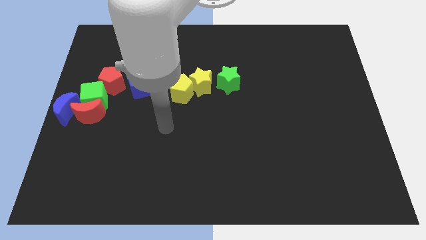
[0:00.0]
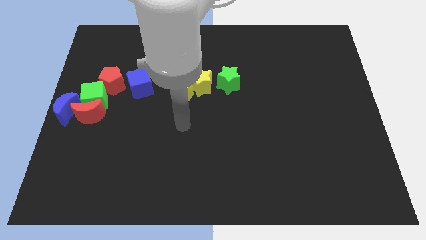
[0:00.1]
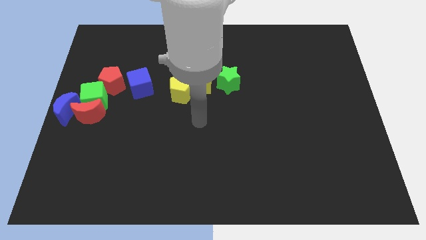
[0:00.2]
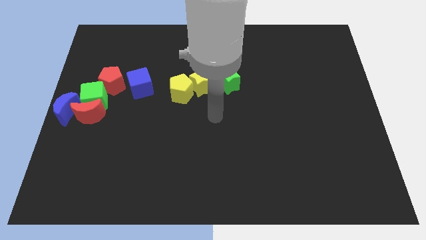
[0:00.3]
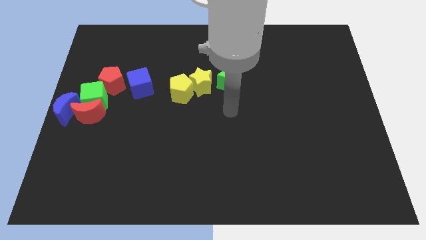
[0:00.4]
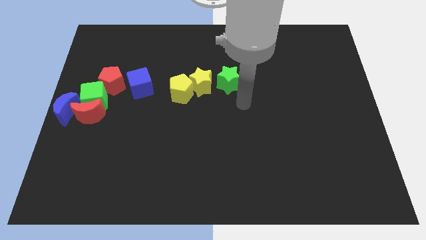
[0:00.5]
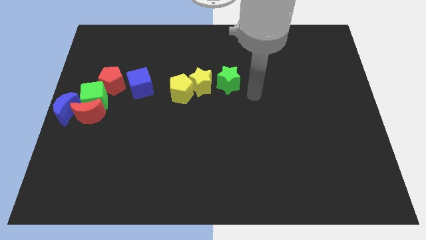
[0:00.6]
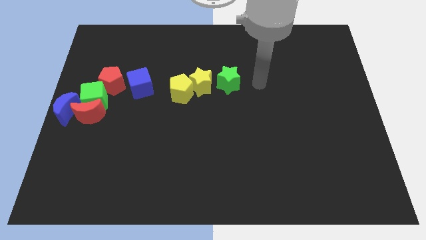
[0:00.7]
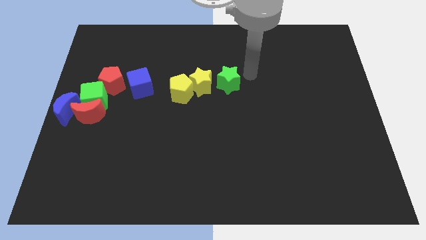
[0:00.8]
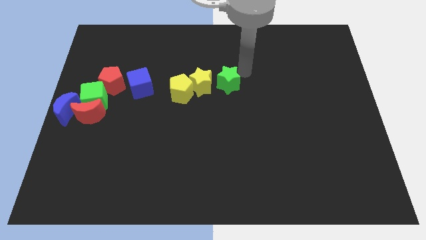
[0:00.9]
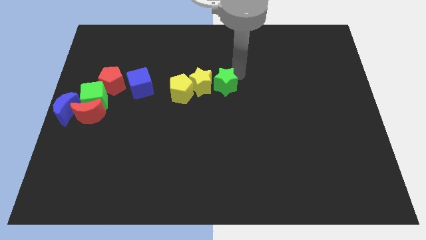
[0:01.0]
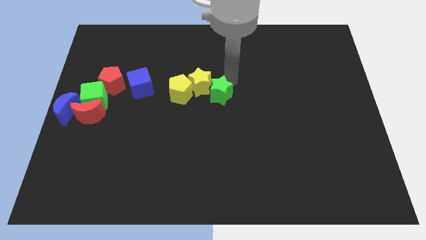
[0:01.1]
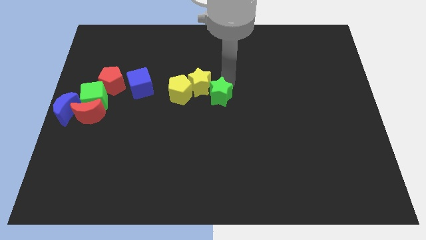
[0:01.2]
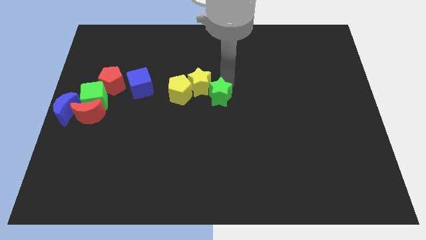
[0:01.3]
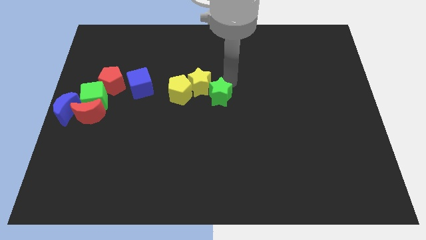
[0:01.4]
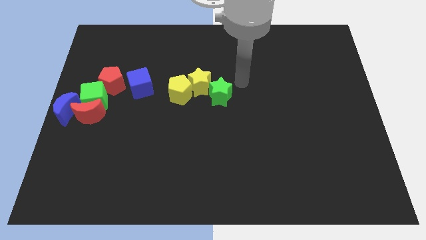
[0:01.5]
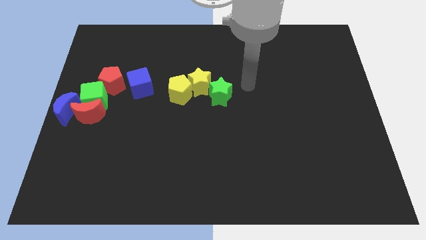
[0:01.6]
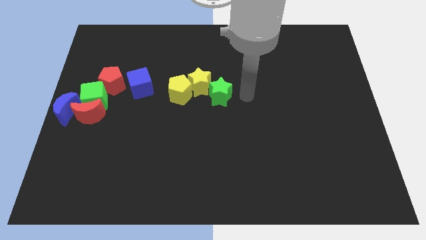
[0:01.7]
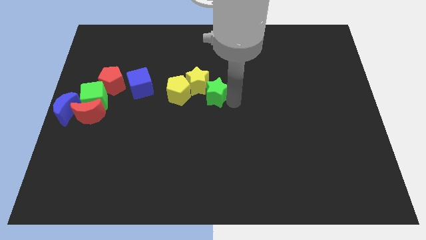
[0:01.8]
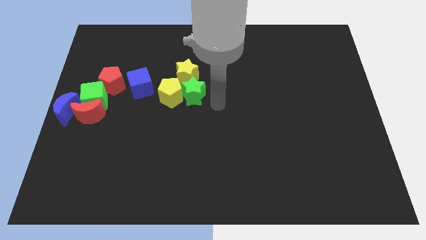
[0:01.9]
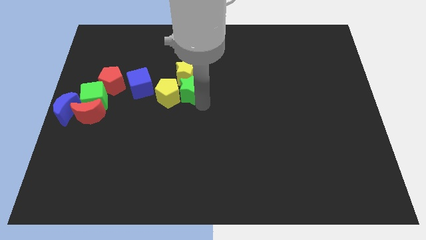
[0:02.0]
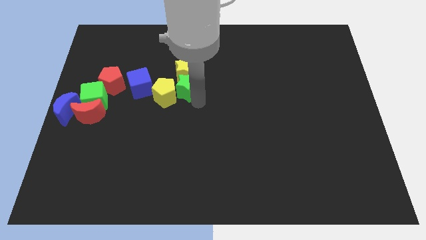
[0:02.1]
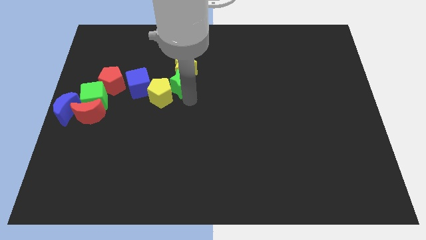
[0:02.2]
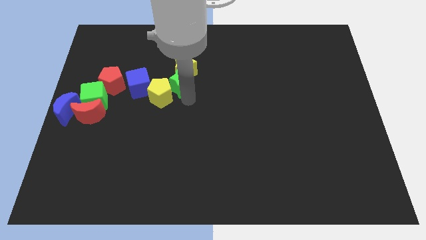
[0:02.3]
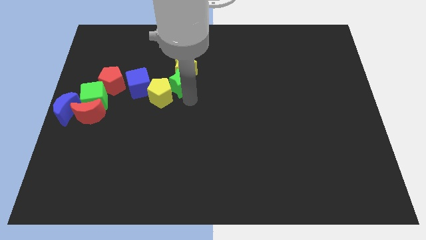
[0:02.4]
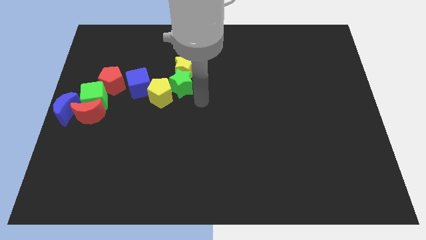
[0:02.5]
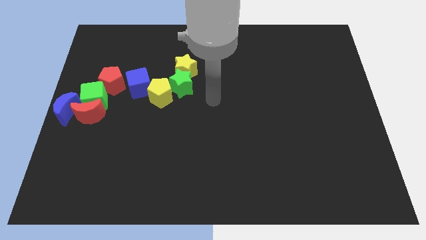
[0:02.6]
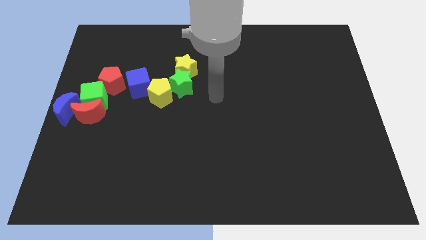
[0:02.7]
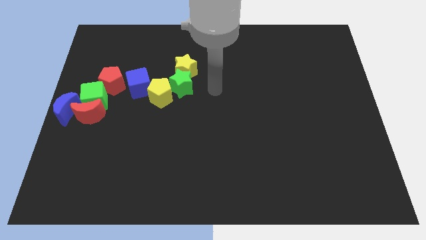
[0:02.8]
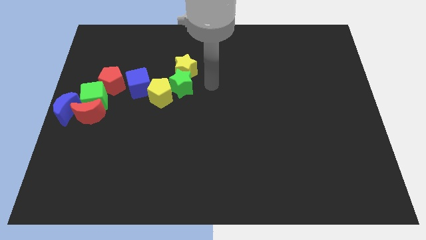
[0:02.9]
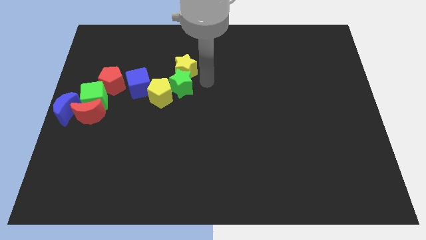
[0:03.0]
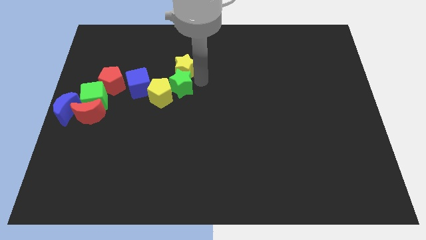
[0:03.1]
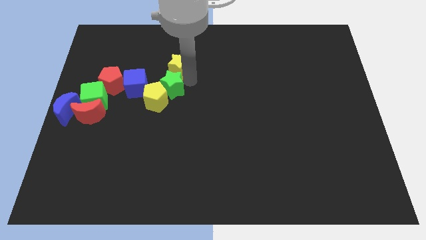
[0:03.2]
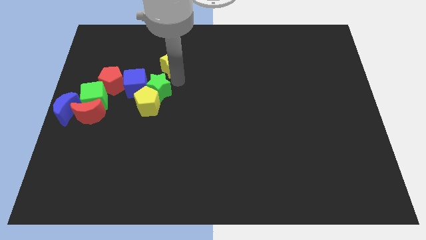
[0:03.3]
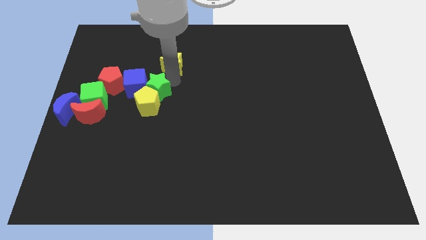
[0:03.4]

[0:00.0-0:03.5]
move the green star in between the yellow star and yellow pentagon

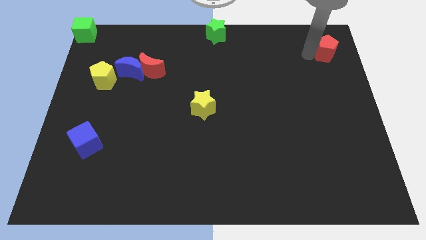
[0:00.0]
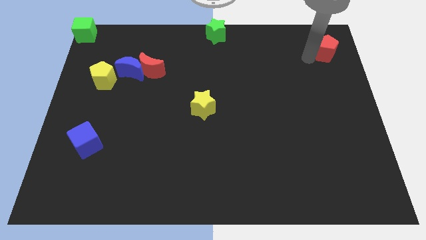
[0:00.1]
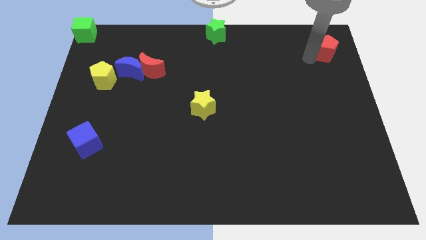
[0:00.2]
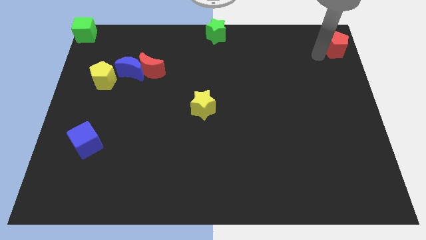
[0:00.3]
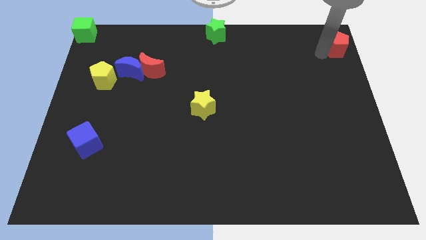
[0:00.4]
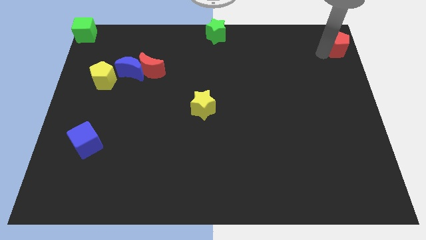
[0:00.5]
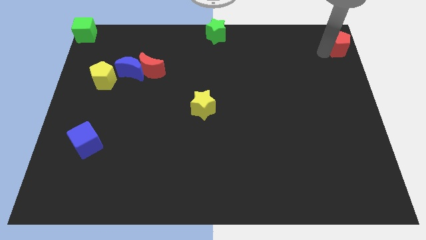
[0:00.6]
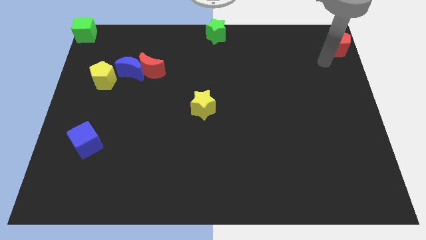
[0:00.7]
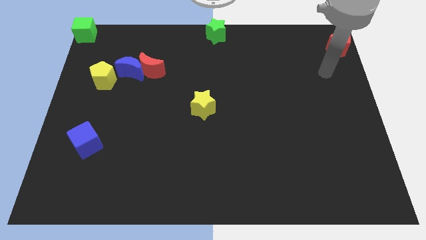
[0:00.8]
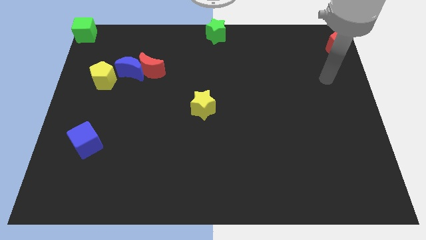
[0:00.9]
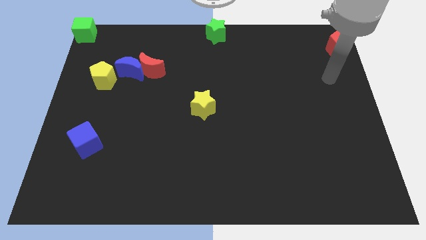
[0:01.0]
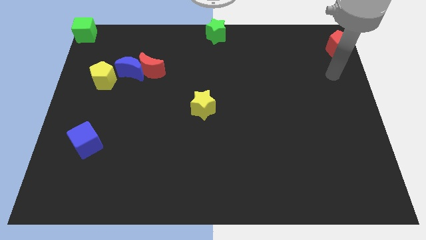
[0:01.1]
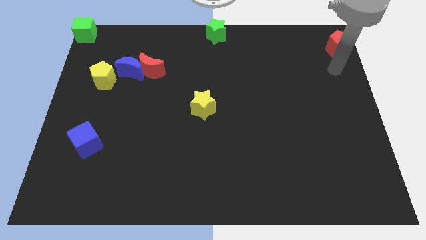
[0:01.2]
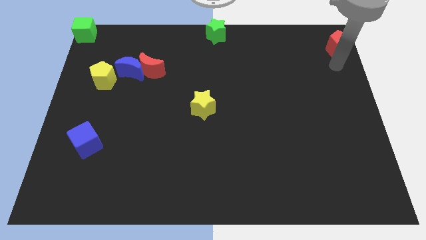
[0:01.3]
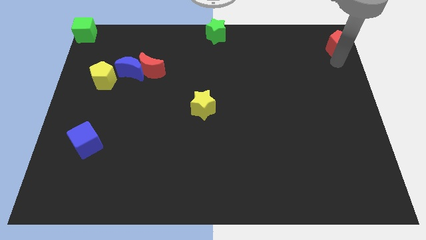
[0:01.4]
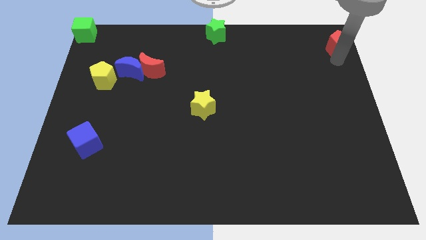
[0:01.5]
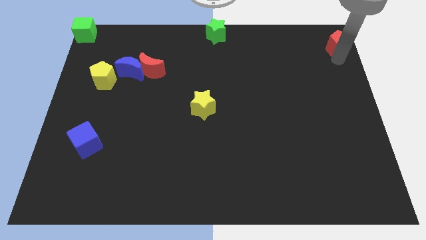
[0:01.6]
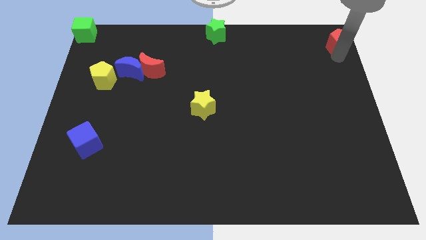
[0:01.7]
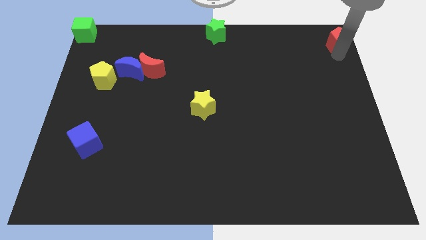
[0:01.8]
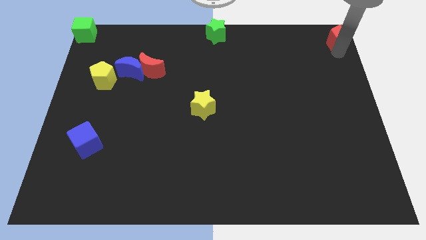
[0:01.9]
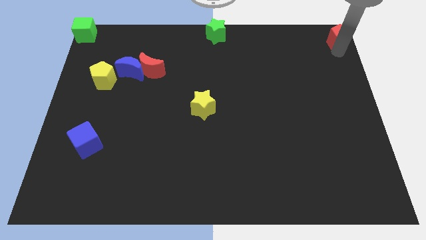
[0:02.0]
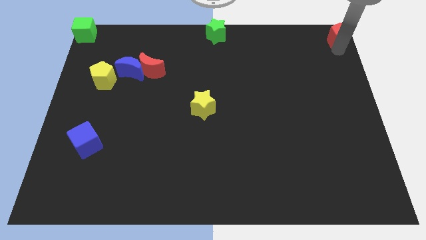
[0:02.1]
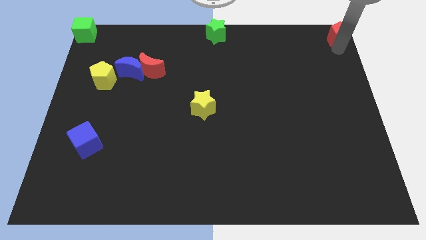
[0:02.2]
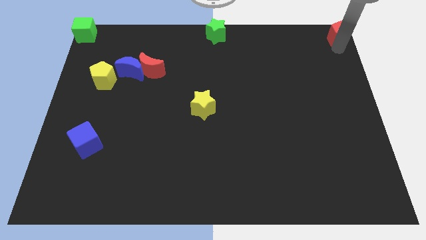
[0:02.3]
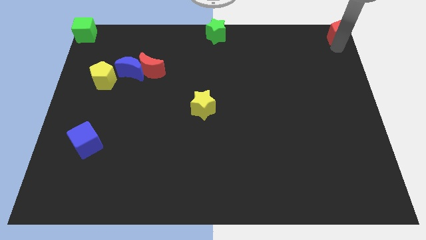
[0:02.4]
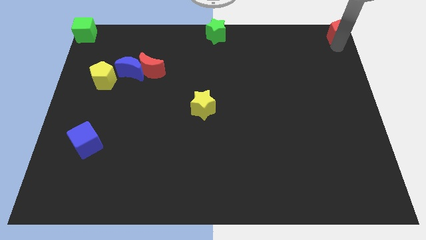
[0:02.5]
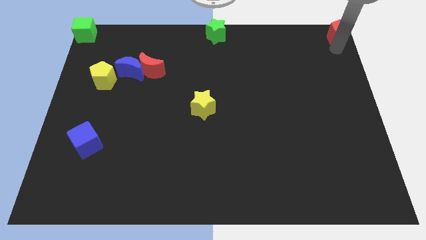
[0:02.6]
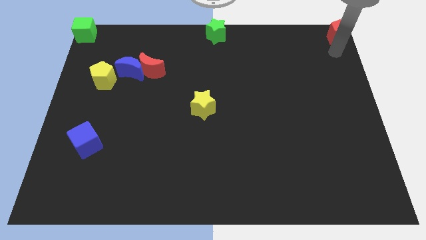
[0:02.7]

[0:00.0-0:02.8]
push the red pentagon to the top right corner

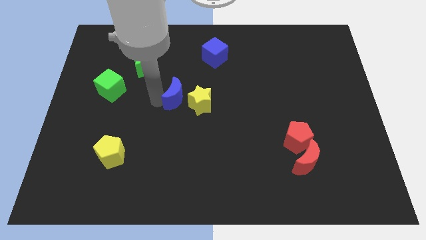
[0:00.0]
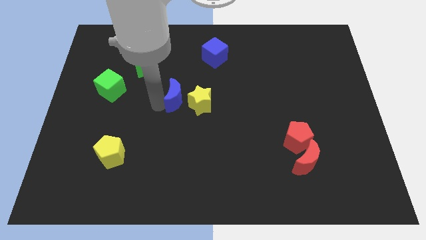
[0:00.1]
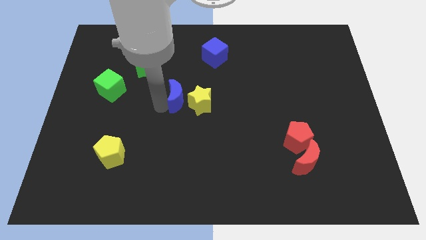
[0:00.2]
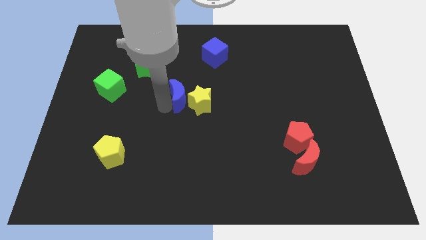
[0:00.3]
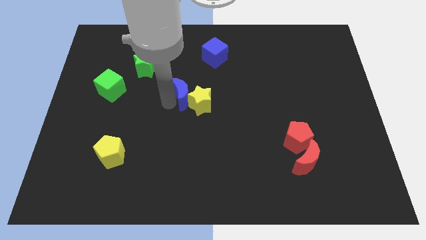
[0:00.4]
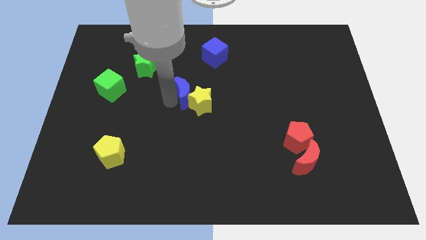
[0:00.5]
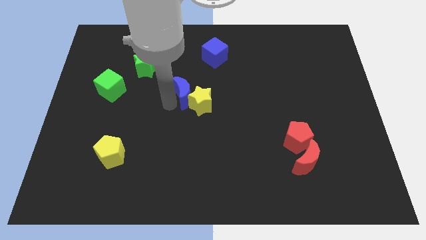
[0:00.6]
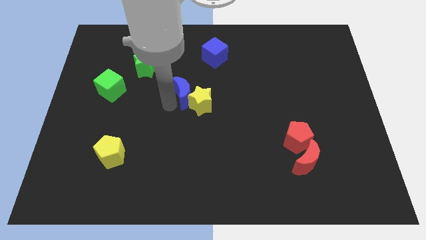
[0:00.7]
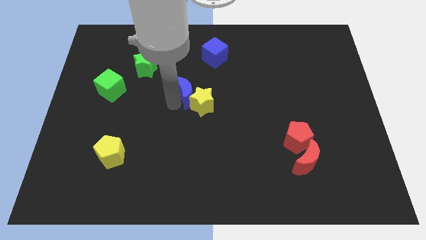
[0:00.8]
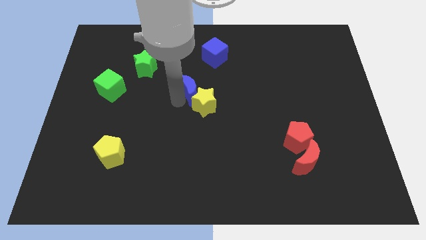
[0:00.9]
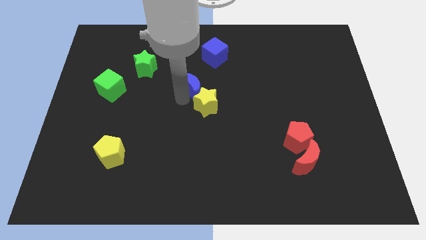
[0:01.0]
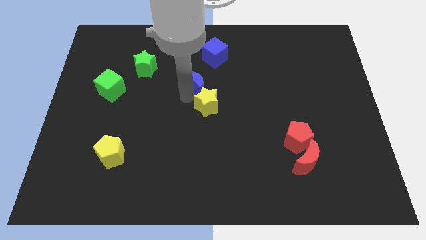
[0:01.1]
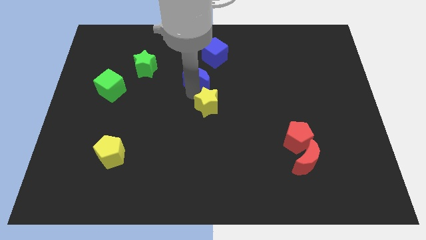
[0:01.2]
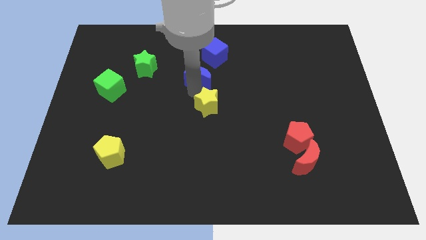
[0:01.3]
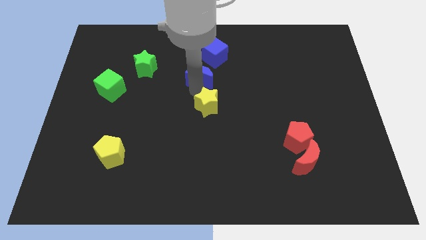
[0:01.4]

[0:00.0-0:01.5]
push the blue crescent into the yellow star

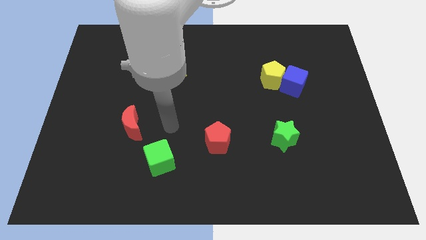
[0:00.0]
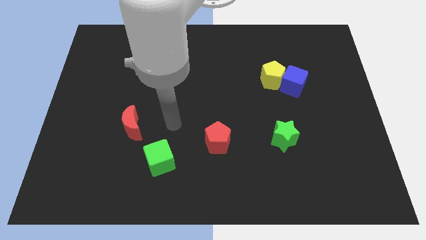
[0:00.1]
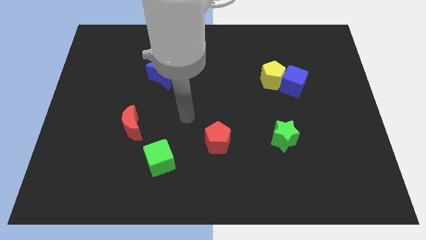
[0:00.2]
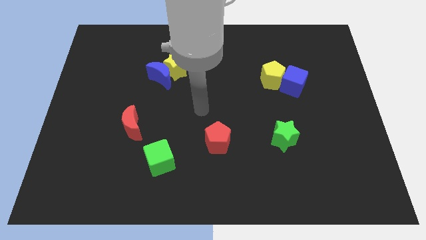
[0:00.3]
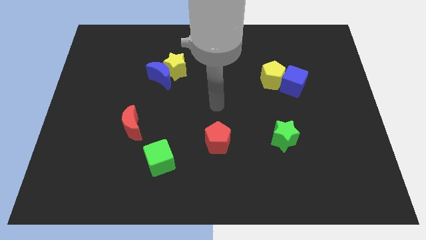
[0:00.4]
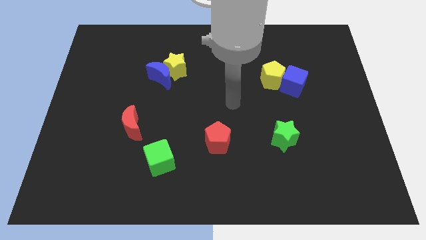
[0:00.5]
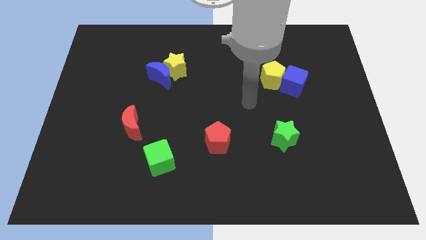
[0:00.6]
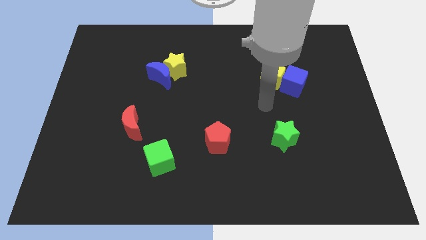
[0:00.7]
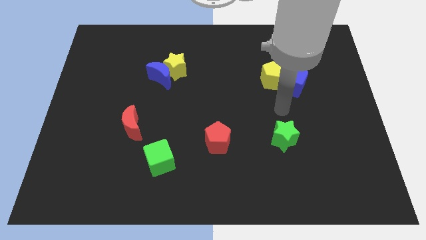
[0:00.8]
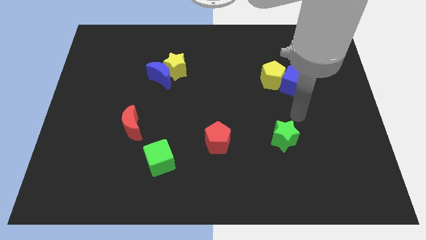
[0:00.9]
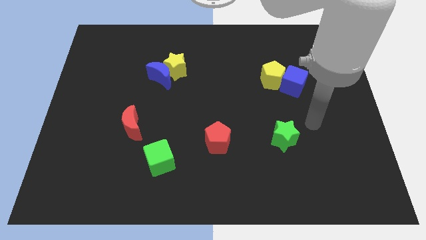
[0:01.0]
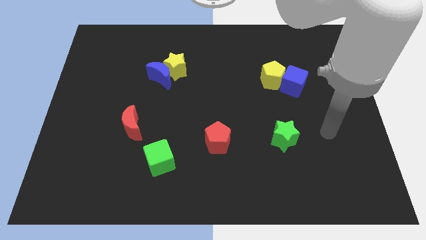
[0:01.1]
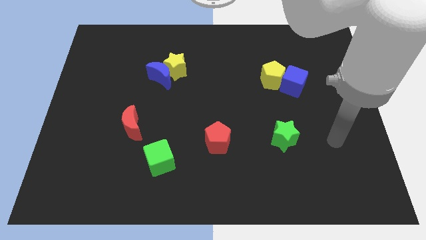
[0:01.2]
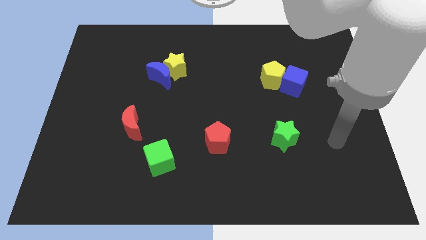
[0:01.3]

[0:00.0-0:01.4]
point your arm at the right side of the green star
